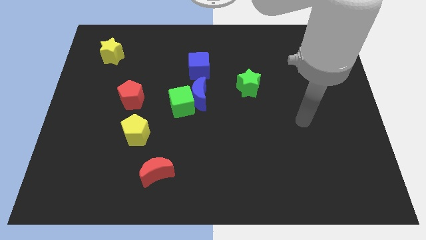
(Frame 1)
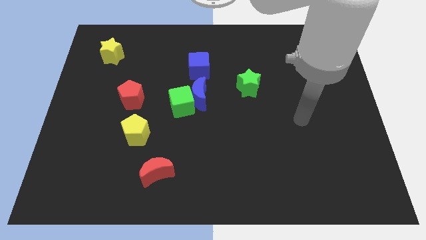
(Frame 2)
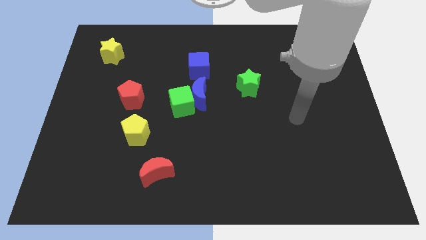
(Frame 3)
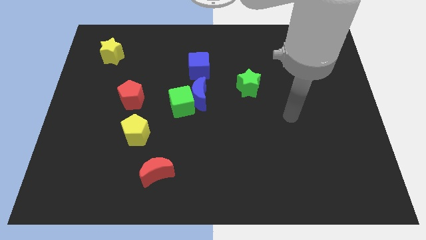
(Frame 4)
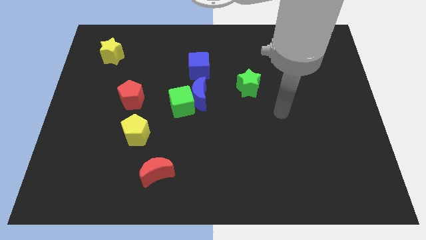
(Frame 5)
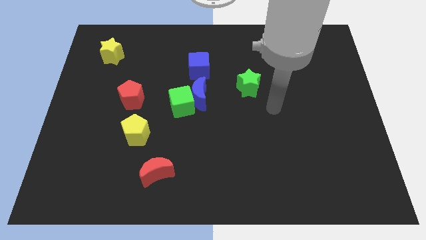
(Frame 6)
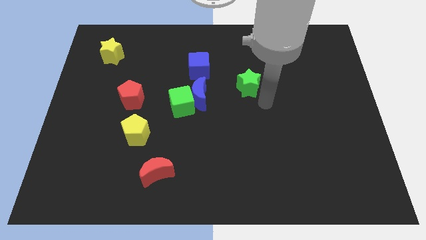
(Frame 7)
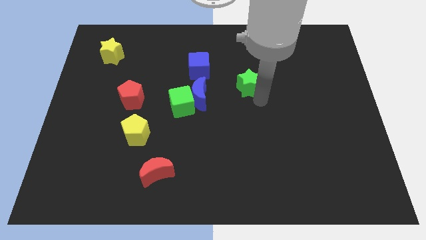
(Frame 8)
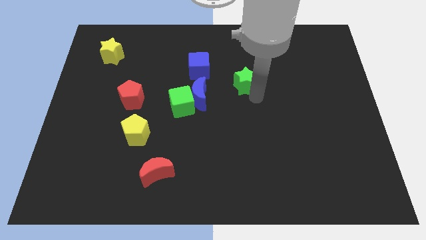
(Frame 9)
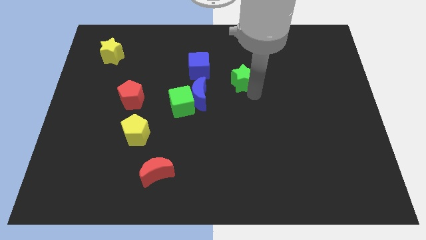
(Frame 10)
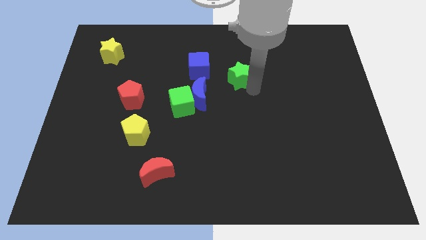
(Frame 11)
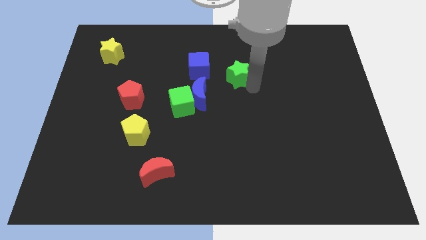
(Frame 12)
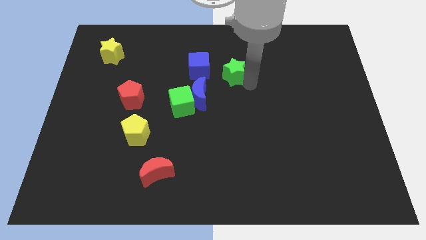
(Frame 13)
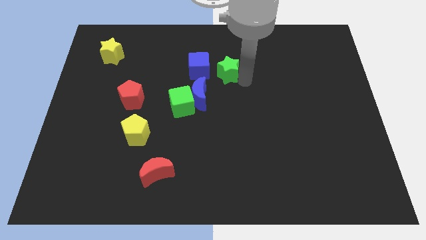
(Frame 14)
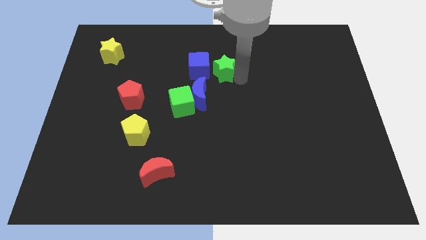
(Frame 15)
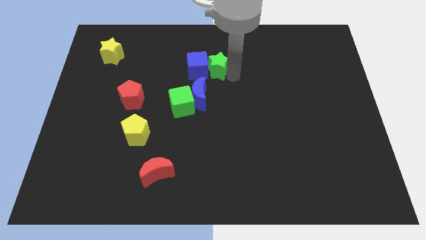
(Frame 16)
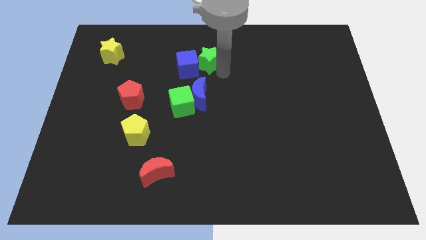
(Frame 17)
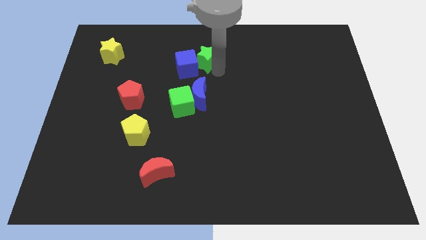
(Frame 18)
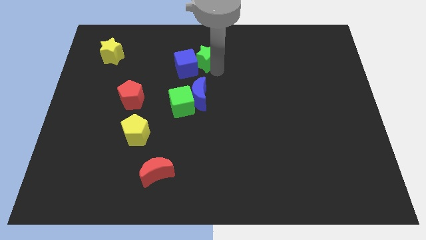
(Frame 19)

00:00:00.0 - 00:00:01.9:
place the green star vertically above the blue moon

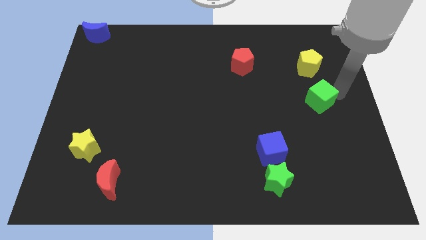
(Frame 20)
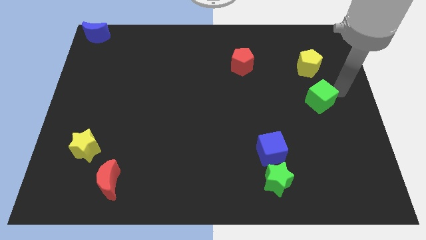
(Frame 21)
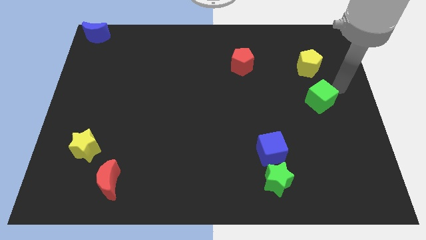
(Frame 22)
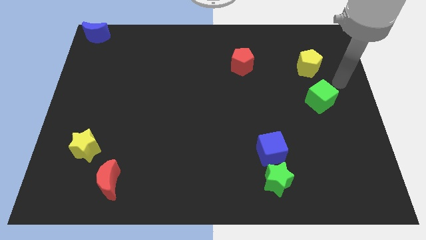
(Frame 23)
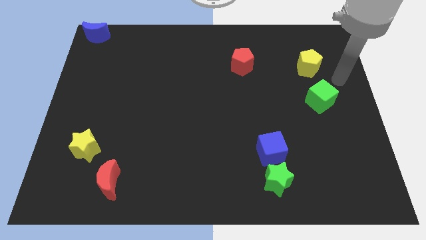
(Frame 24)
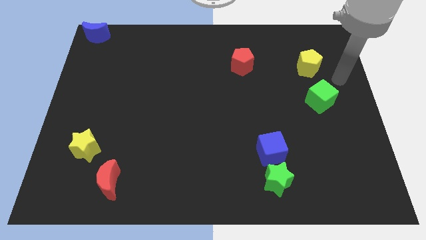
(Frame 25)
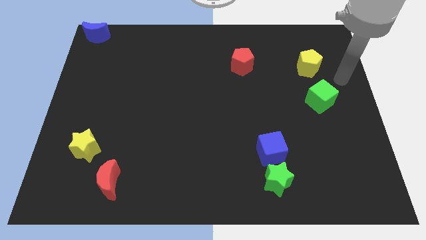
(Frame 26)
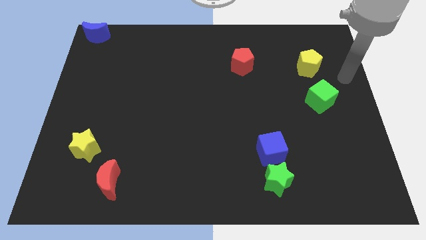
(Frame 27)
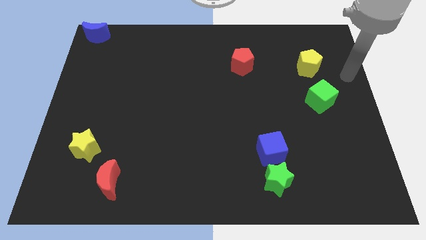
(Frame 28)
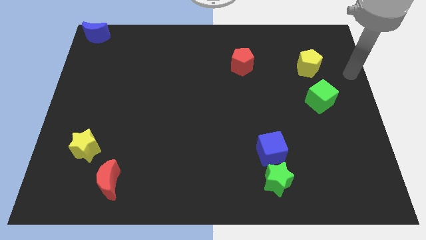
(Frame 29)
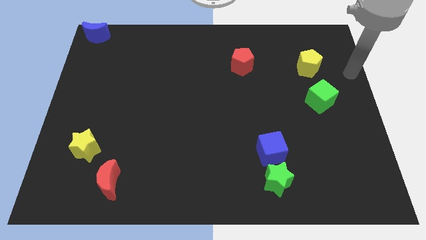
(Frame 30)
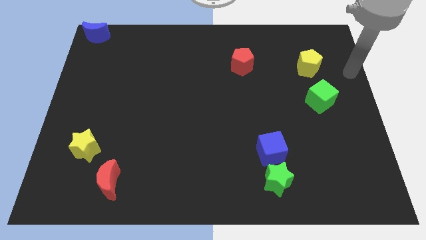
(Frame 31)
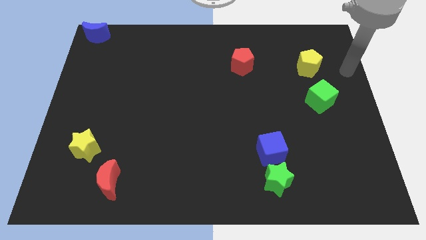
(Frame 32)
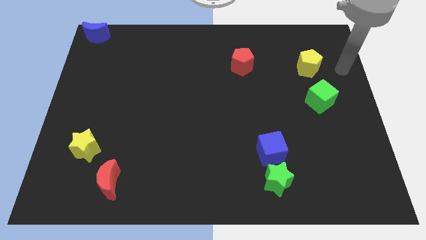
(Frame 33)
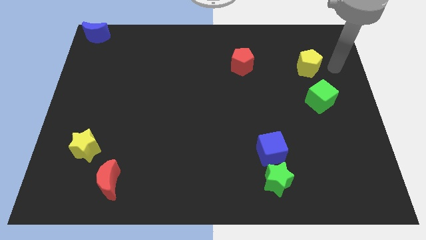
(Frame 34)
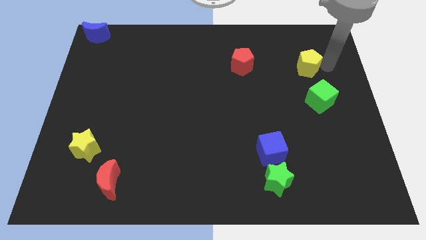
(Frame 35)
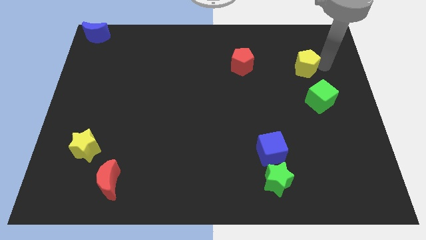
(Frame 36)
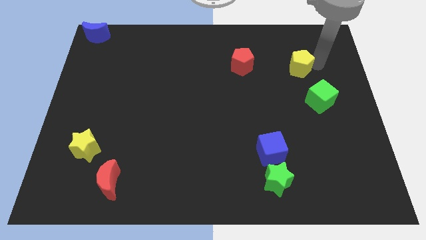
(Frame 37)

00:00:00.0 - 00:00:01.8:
move your arm away from the green cube

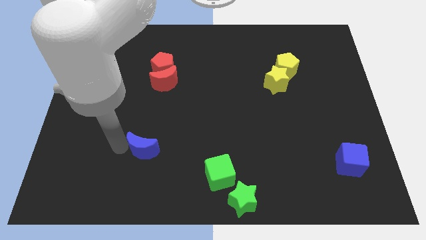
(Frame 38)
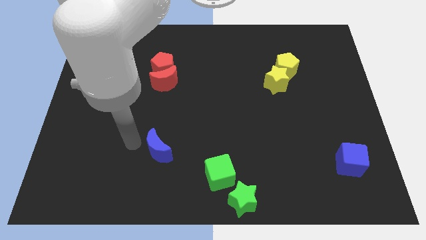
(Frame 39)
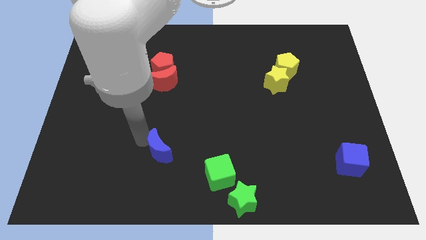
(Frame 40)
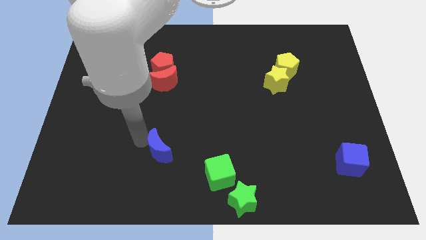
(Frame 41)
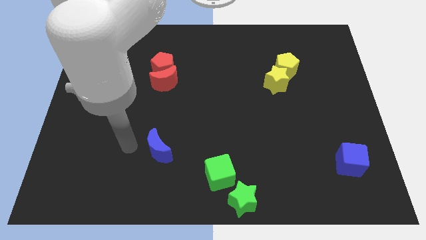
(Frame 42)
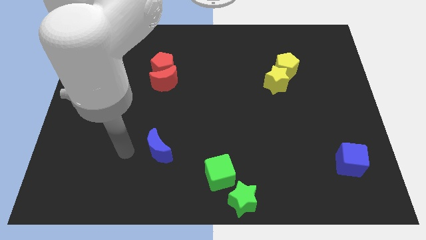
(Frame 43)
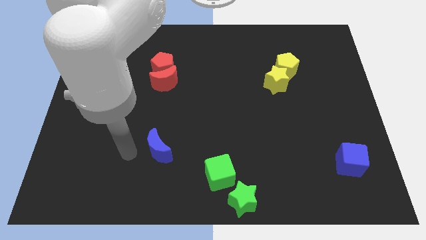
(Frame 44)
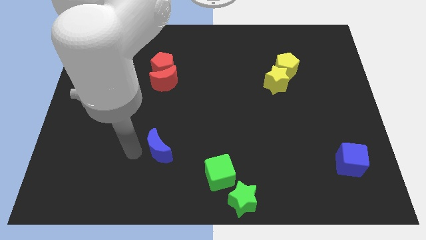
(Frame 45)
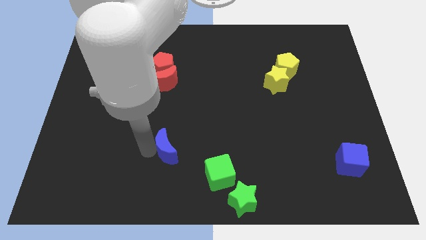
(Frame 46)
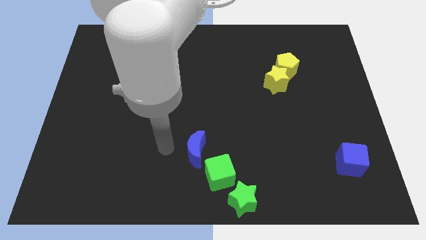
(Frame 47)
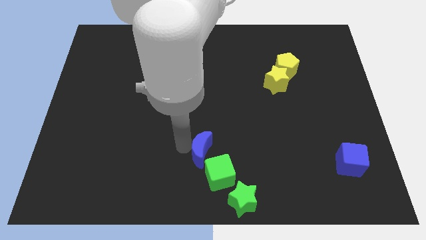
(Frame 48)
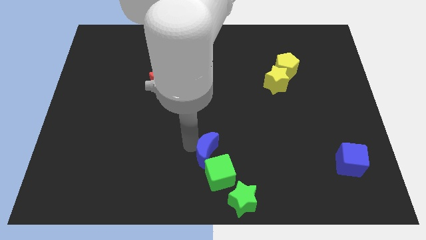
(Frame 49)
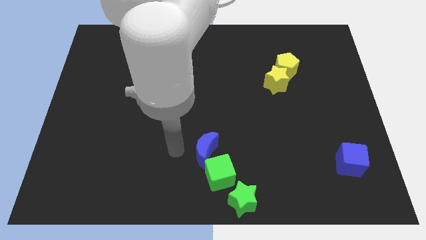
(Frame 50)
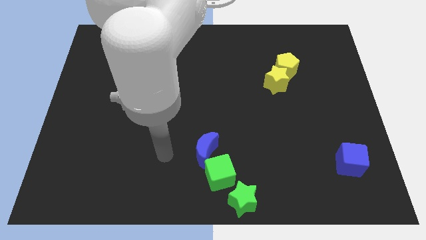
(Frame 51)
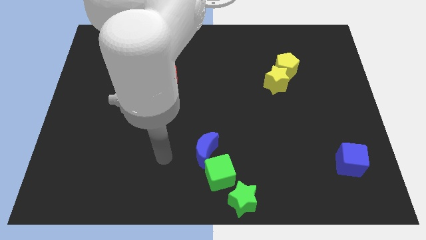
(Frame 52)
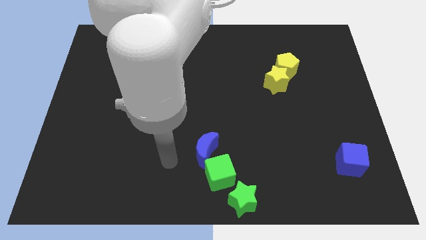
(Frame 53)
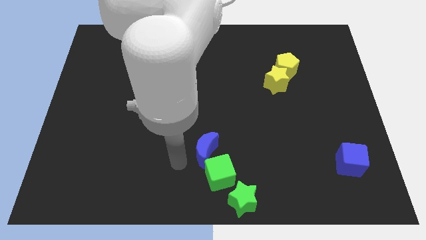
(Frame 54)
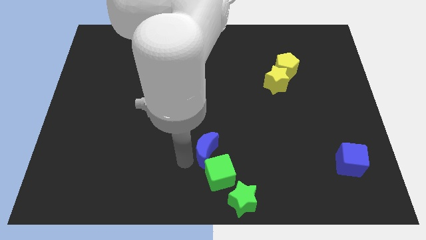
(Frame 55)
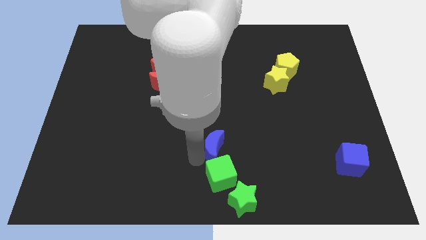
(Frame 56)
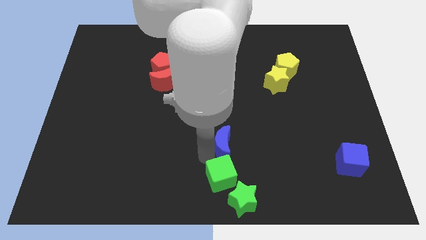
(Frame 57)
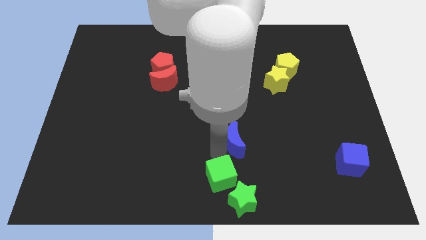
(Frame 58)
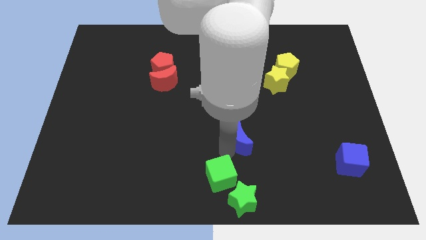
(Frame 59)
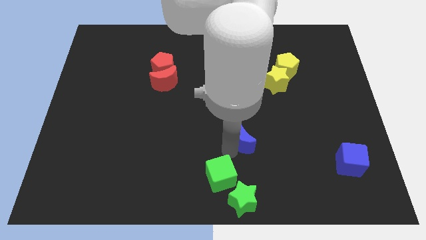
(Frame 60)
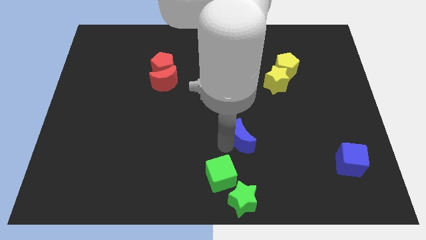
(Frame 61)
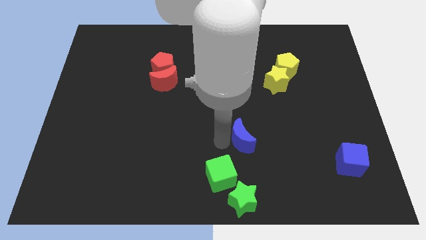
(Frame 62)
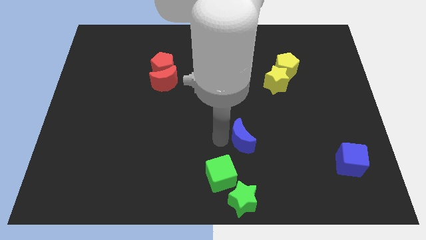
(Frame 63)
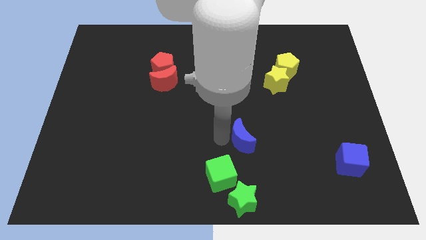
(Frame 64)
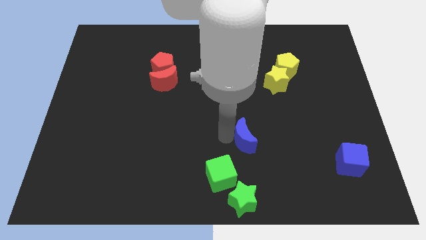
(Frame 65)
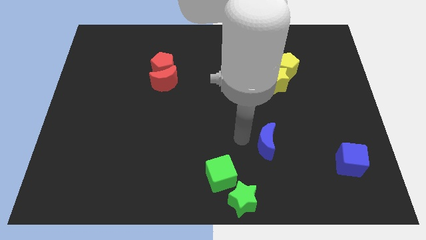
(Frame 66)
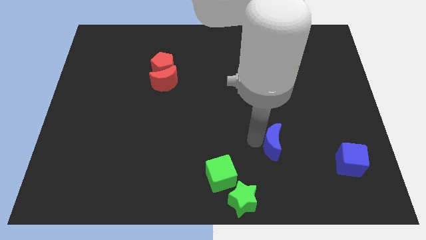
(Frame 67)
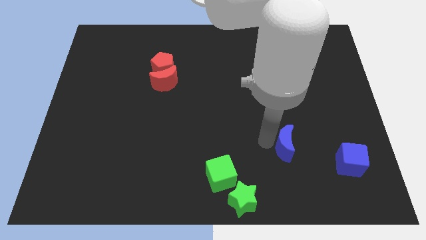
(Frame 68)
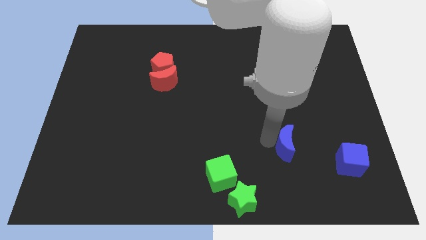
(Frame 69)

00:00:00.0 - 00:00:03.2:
push the blue moon below the green star

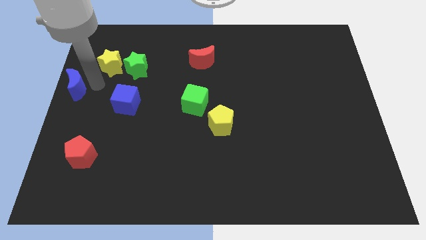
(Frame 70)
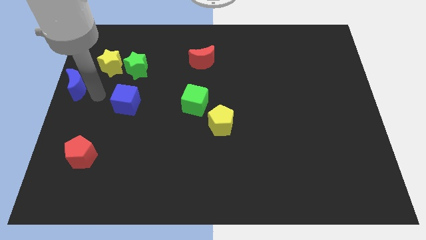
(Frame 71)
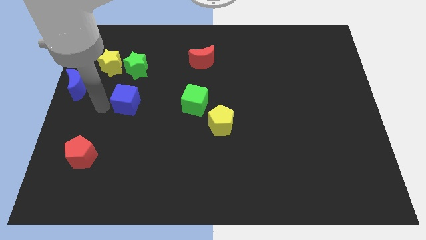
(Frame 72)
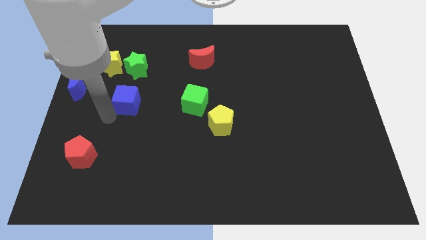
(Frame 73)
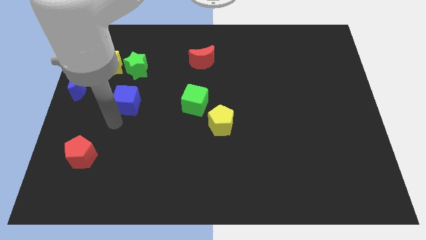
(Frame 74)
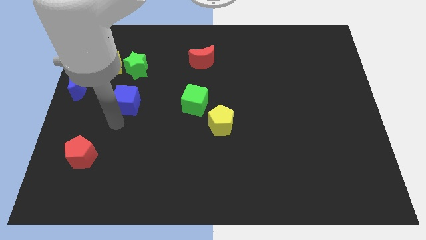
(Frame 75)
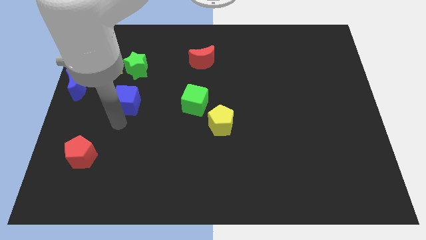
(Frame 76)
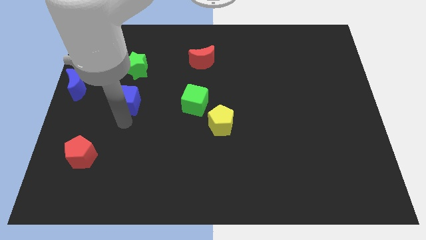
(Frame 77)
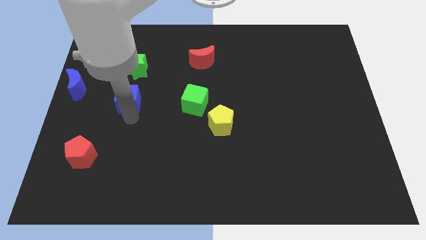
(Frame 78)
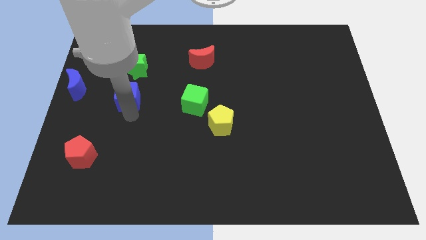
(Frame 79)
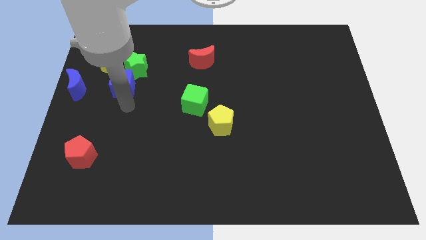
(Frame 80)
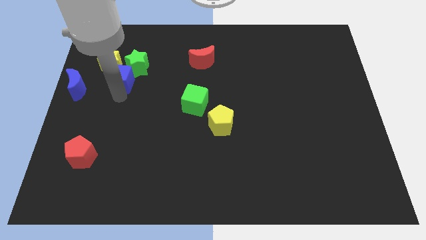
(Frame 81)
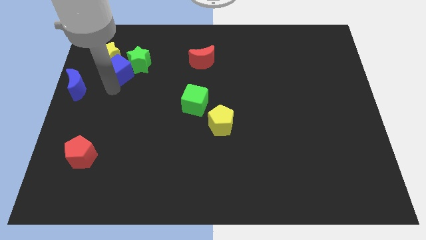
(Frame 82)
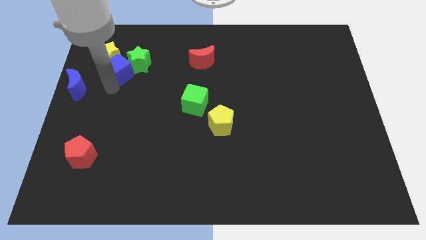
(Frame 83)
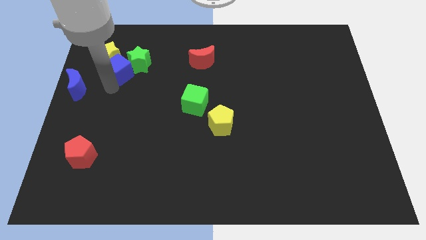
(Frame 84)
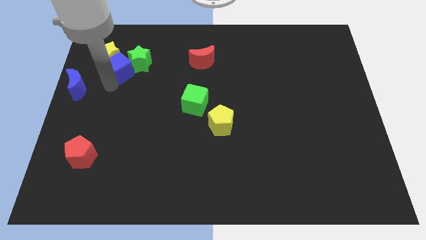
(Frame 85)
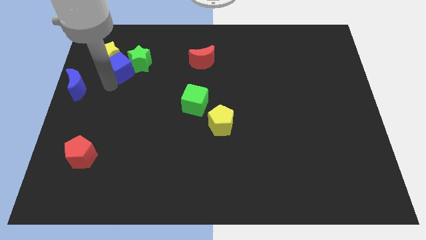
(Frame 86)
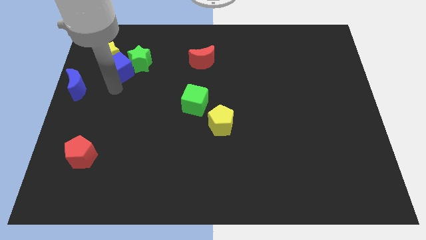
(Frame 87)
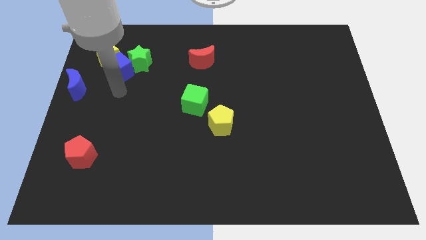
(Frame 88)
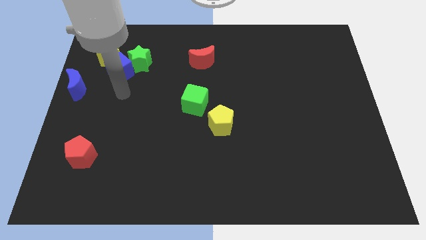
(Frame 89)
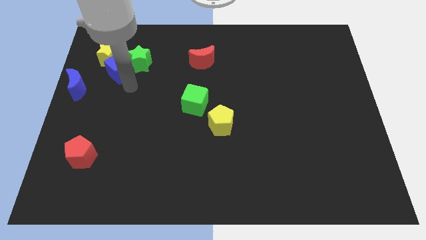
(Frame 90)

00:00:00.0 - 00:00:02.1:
push the blue cube into the green and the yellow star
